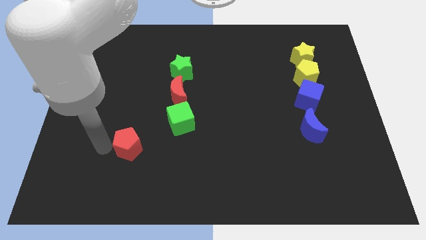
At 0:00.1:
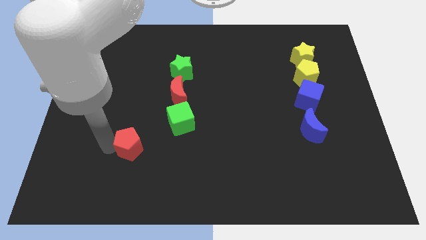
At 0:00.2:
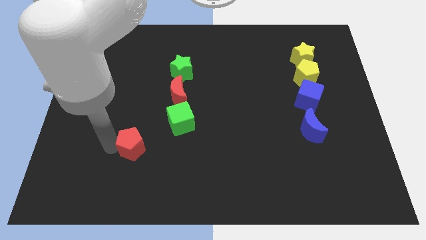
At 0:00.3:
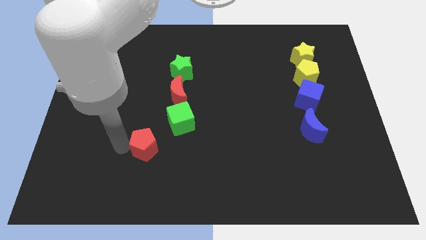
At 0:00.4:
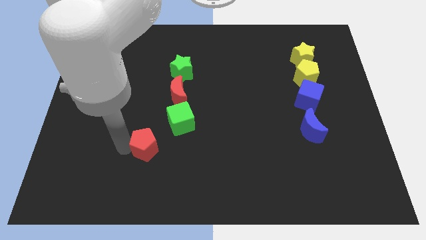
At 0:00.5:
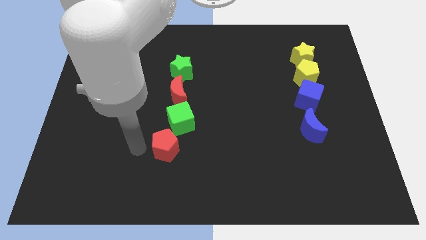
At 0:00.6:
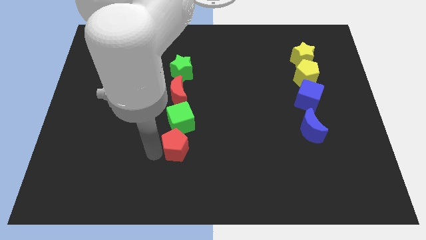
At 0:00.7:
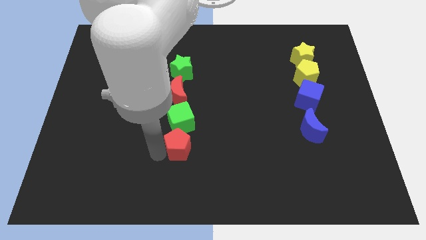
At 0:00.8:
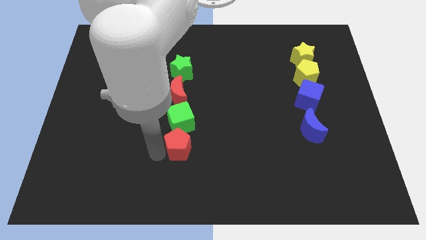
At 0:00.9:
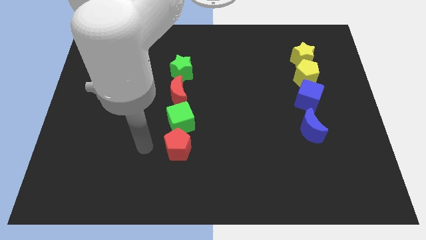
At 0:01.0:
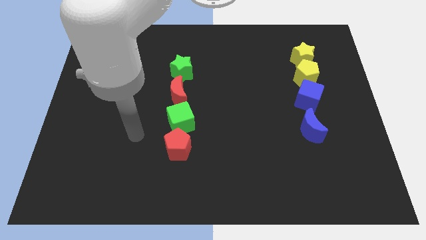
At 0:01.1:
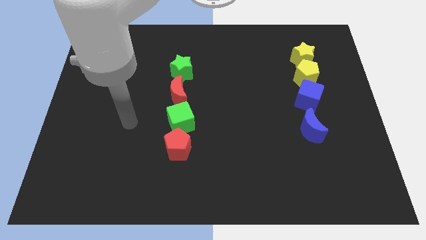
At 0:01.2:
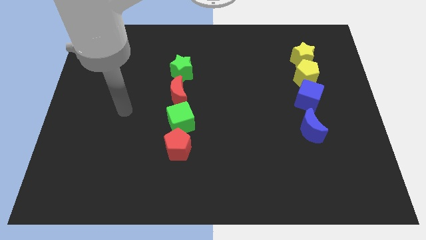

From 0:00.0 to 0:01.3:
place the red pentagon below the green cube

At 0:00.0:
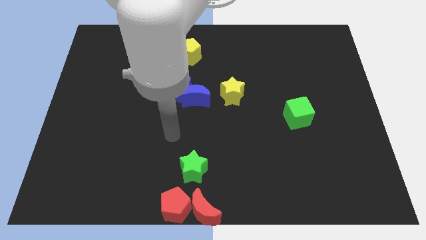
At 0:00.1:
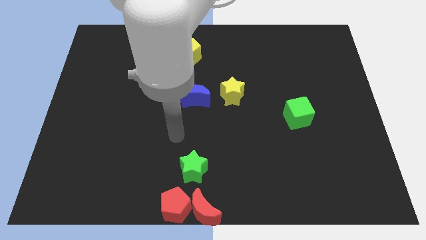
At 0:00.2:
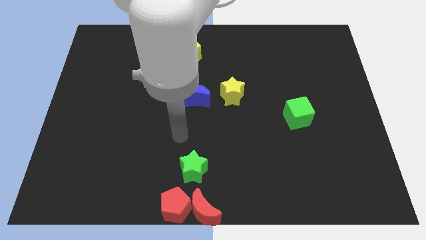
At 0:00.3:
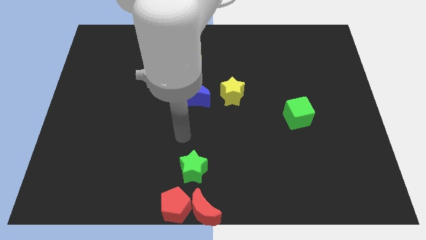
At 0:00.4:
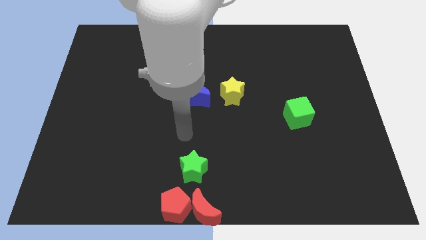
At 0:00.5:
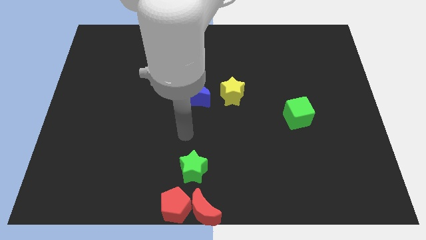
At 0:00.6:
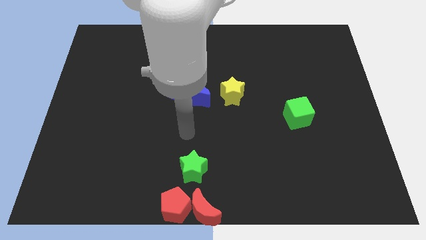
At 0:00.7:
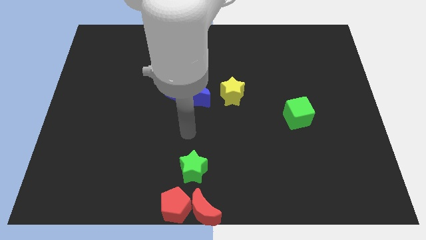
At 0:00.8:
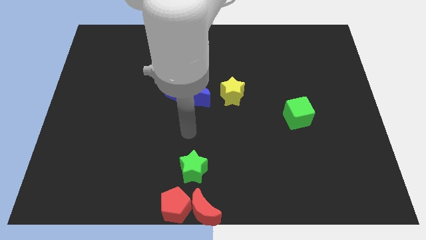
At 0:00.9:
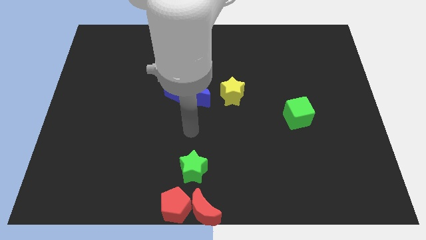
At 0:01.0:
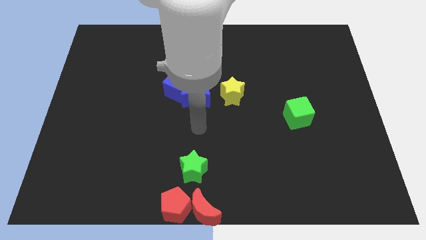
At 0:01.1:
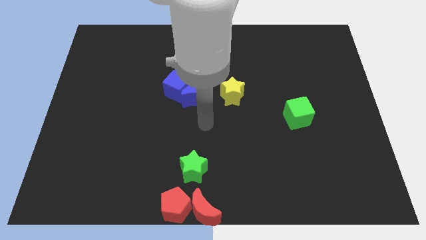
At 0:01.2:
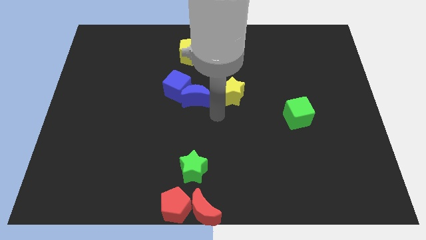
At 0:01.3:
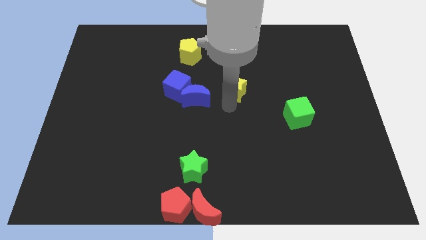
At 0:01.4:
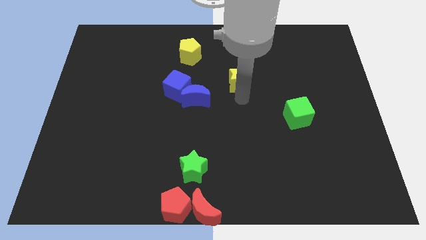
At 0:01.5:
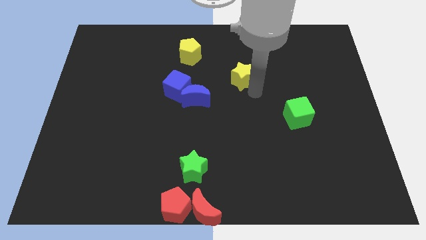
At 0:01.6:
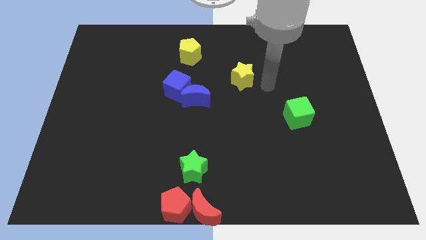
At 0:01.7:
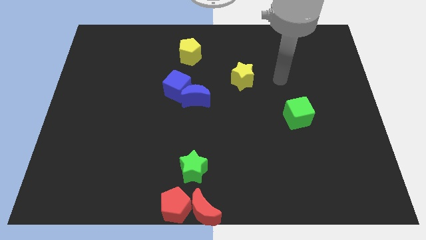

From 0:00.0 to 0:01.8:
put the yellow star in between the yellow pentagon and green cube

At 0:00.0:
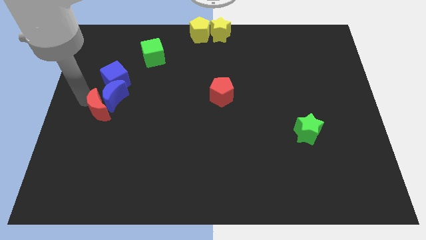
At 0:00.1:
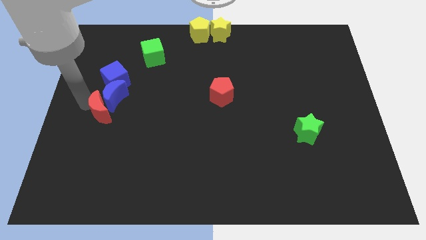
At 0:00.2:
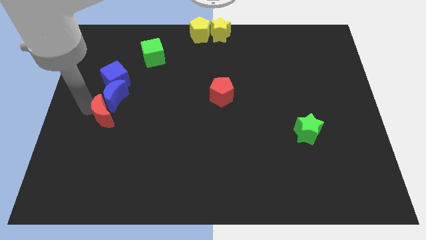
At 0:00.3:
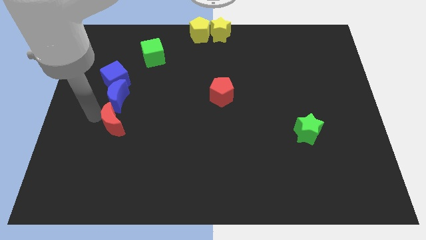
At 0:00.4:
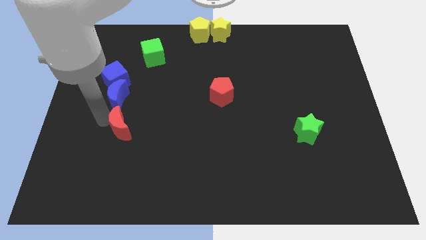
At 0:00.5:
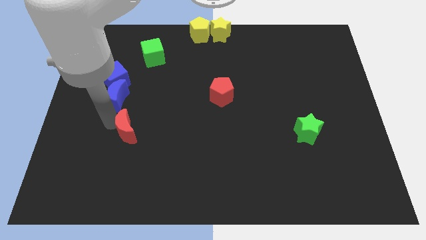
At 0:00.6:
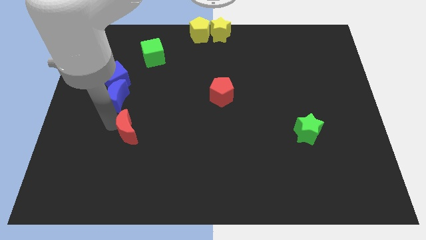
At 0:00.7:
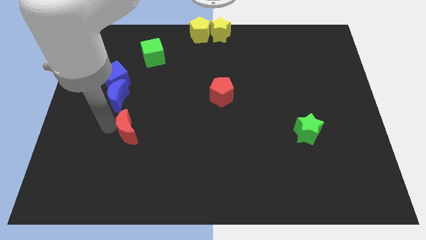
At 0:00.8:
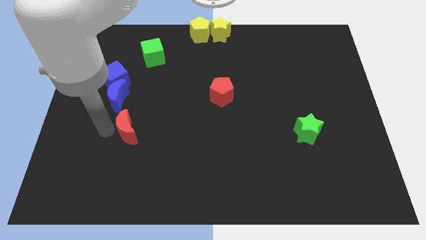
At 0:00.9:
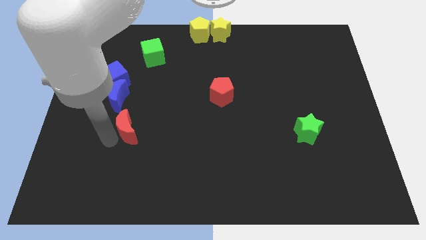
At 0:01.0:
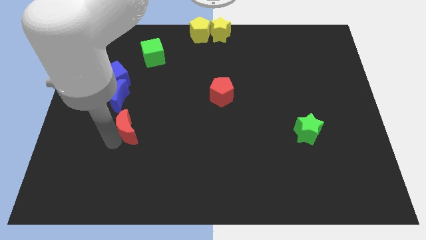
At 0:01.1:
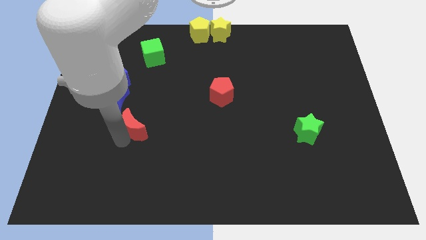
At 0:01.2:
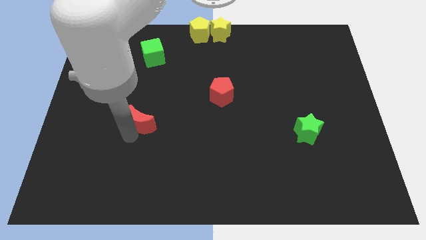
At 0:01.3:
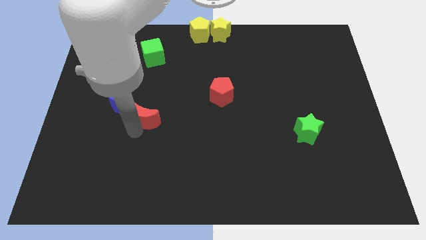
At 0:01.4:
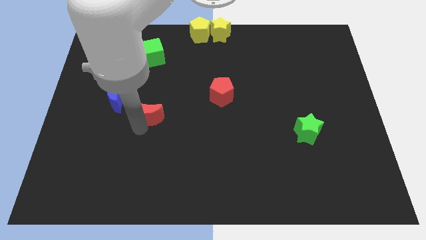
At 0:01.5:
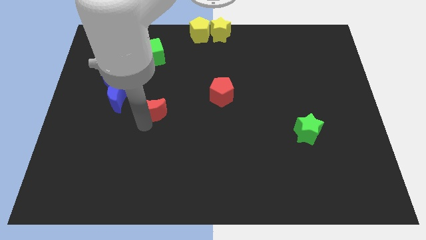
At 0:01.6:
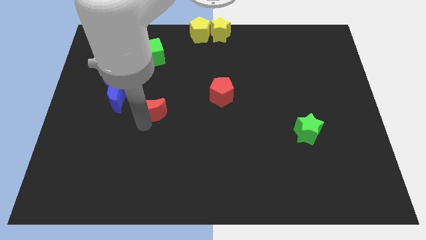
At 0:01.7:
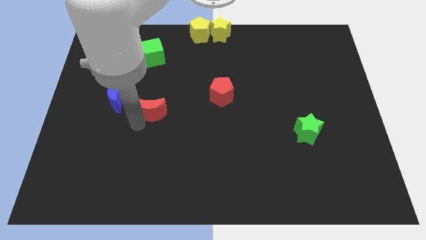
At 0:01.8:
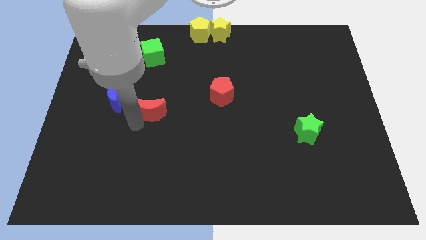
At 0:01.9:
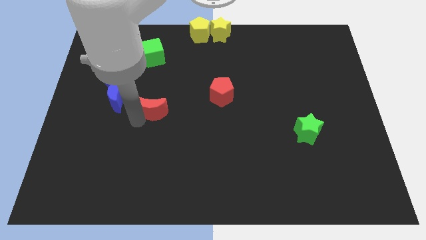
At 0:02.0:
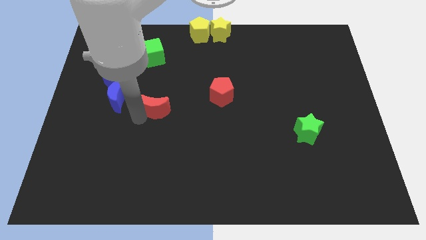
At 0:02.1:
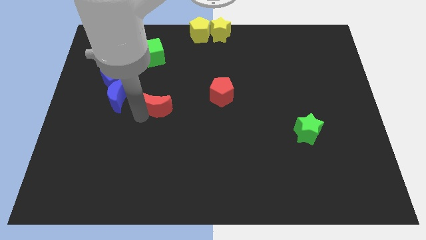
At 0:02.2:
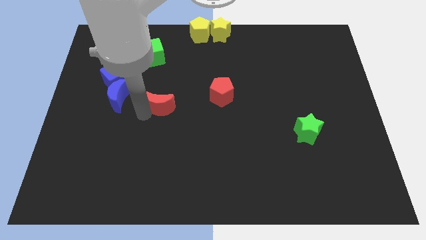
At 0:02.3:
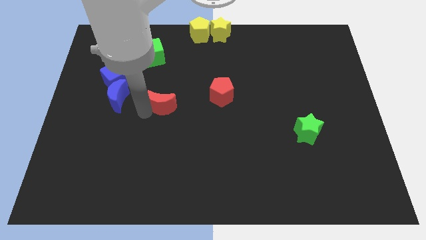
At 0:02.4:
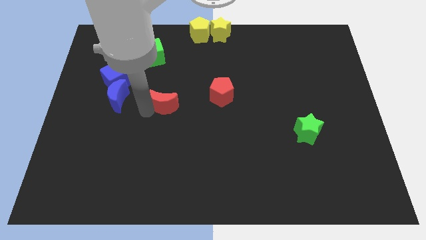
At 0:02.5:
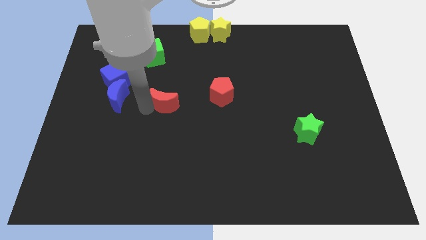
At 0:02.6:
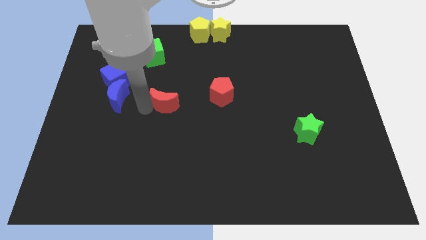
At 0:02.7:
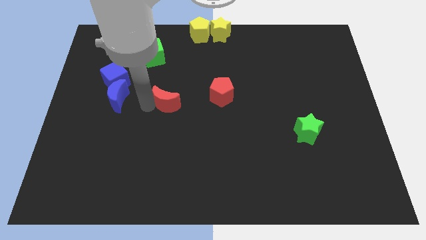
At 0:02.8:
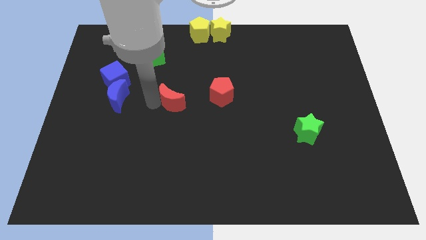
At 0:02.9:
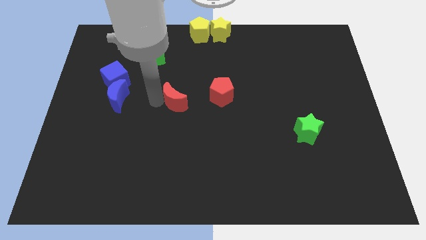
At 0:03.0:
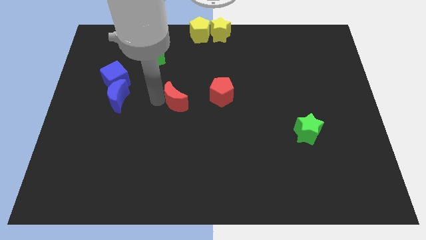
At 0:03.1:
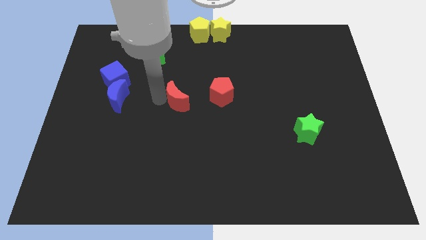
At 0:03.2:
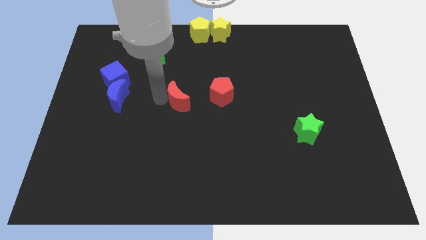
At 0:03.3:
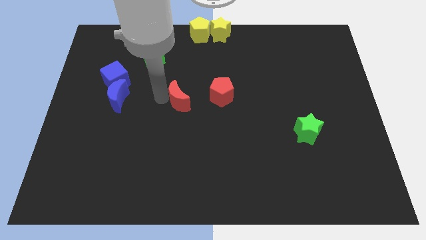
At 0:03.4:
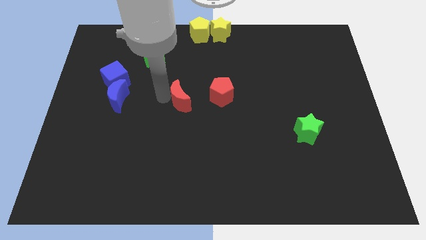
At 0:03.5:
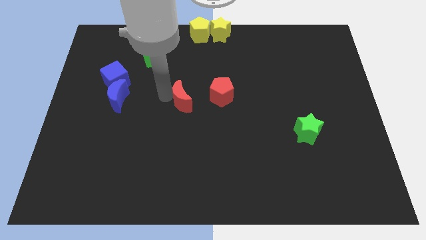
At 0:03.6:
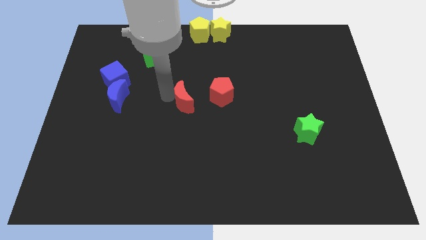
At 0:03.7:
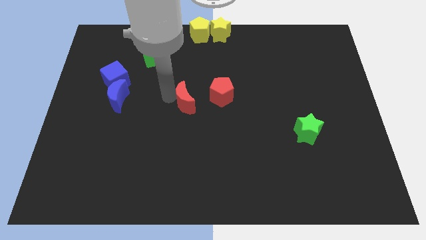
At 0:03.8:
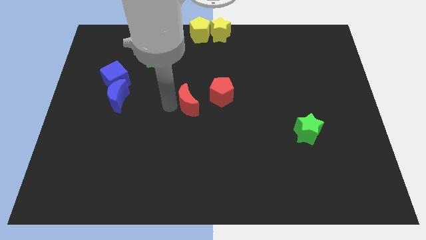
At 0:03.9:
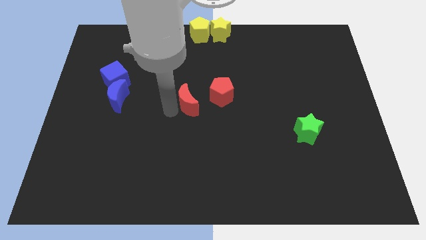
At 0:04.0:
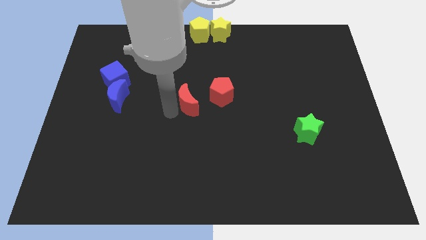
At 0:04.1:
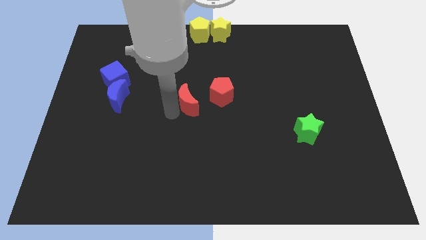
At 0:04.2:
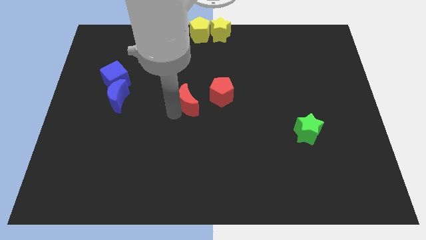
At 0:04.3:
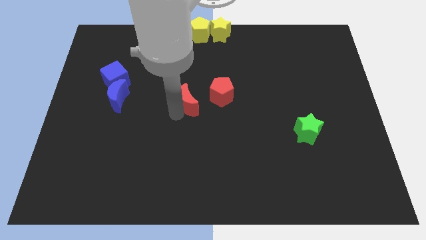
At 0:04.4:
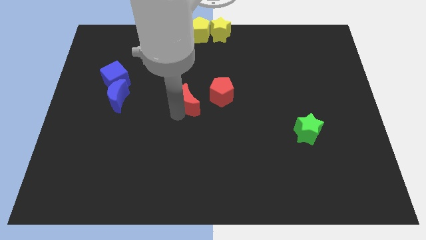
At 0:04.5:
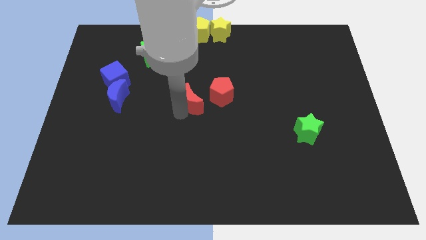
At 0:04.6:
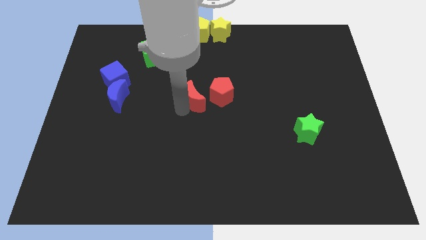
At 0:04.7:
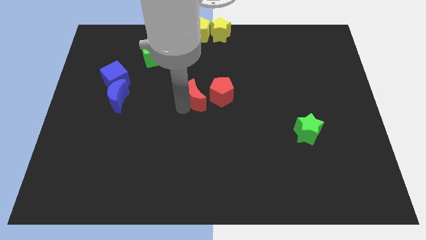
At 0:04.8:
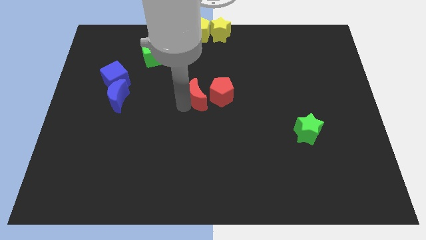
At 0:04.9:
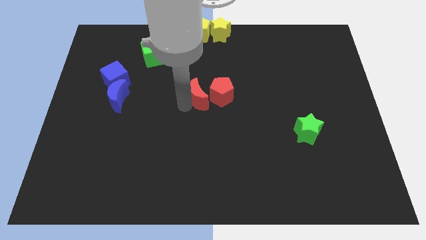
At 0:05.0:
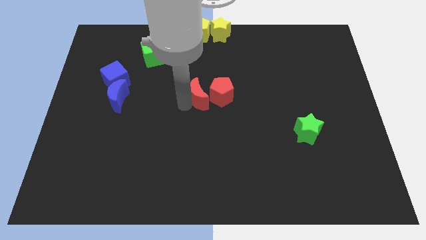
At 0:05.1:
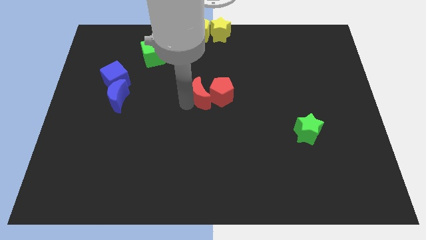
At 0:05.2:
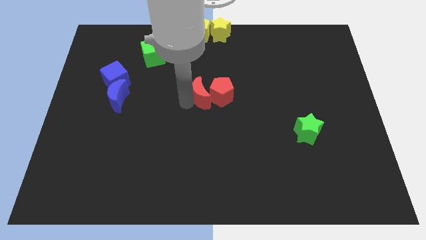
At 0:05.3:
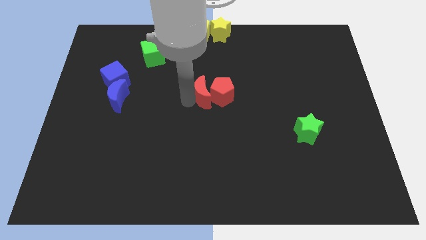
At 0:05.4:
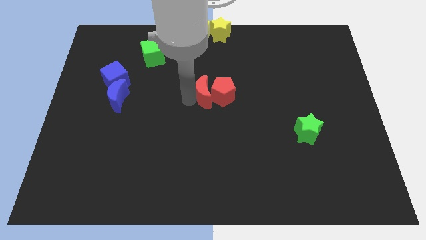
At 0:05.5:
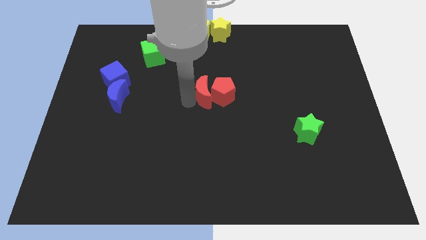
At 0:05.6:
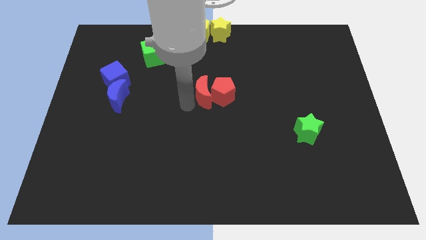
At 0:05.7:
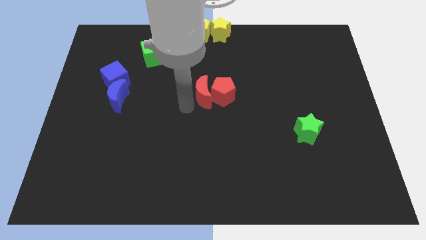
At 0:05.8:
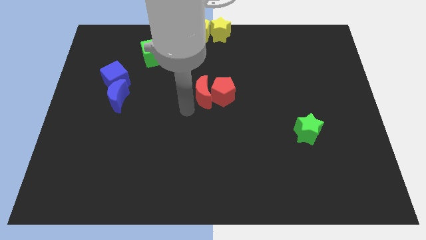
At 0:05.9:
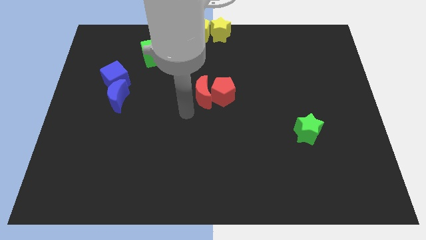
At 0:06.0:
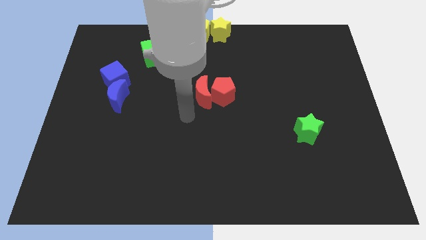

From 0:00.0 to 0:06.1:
push red moon into red pentagon
